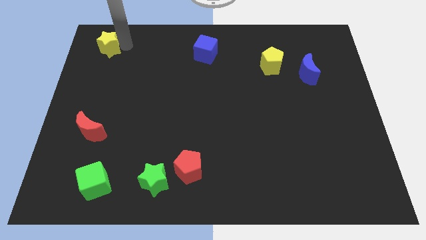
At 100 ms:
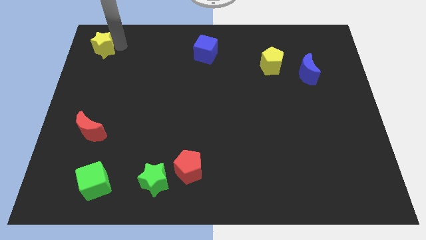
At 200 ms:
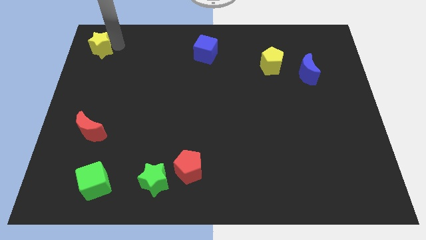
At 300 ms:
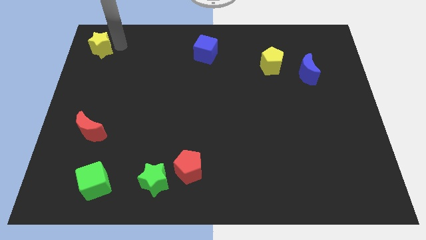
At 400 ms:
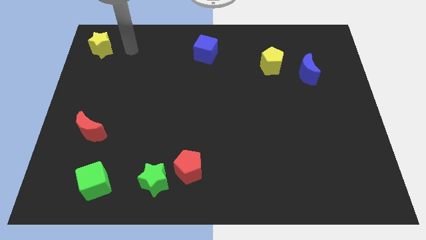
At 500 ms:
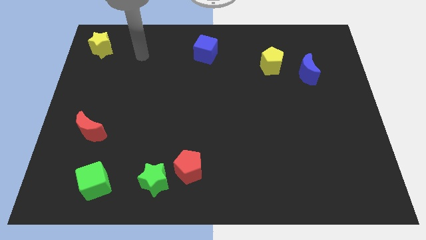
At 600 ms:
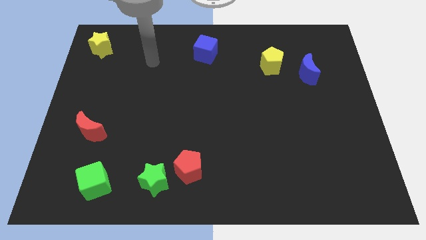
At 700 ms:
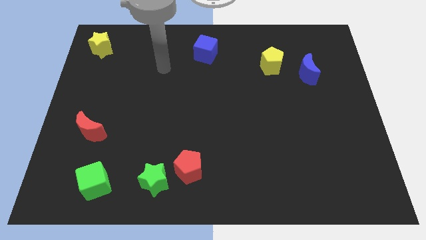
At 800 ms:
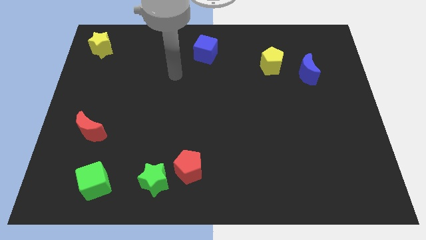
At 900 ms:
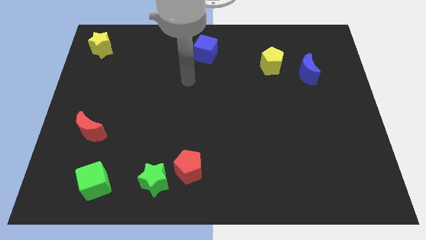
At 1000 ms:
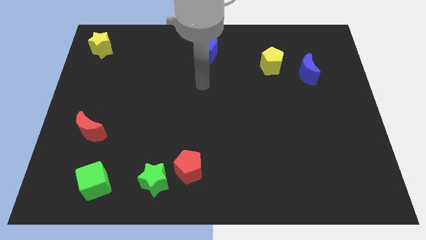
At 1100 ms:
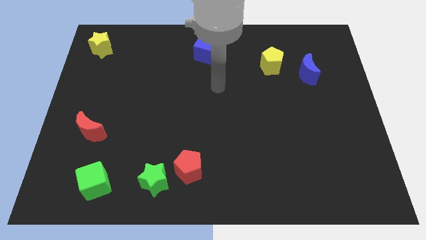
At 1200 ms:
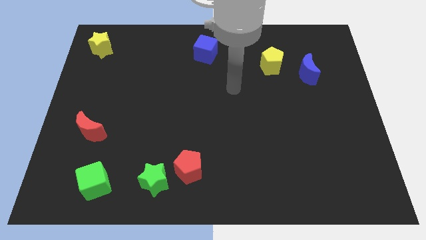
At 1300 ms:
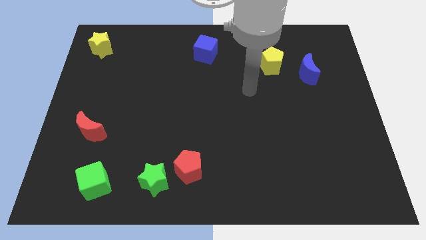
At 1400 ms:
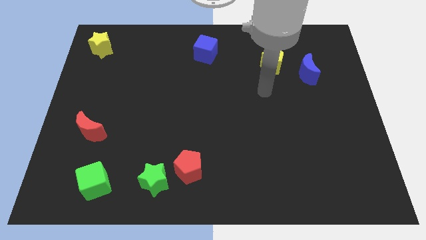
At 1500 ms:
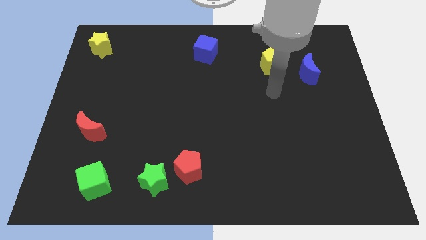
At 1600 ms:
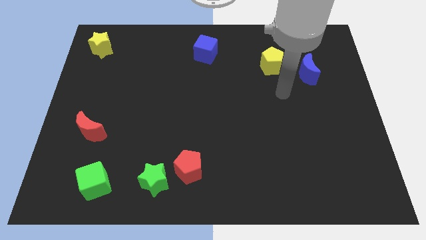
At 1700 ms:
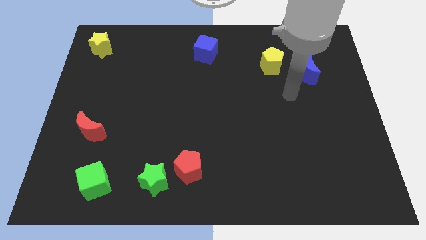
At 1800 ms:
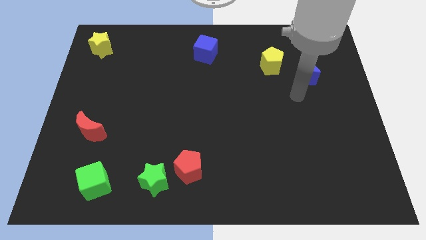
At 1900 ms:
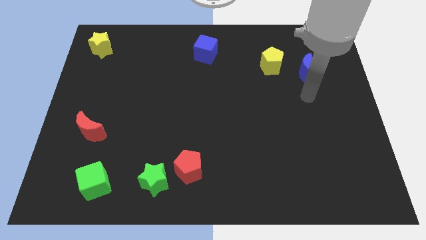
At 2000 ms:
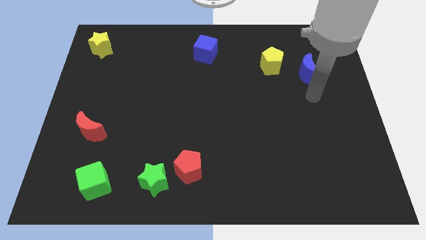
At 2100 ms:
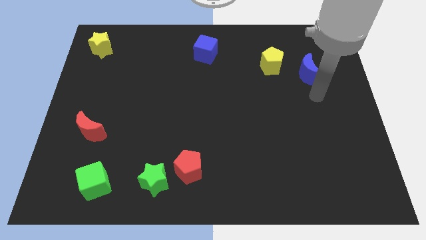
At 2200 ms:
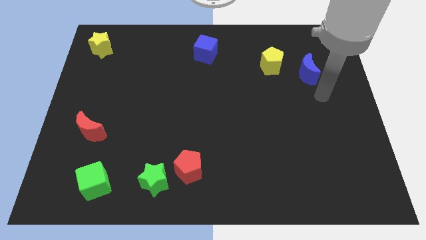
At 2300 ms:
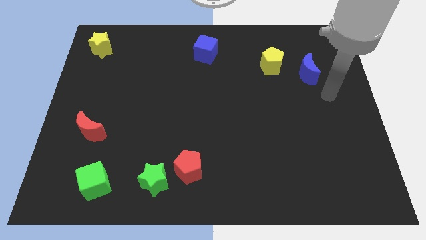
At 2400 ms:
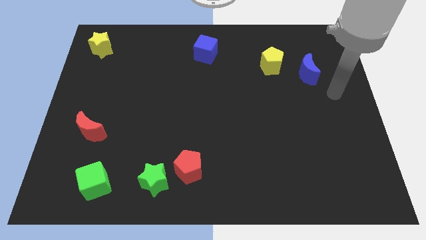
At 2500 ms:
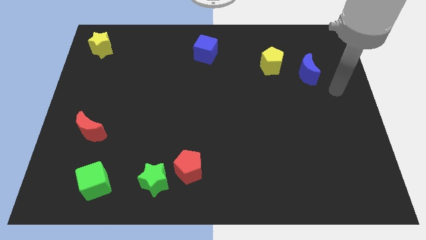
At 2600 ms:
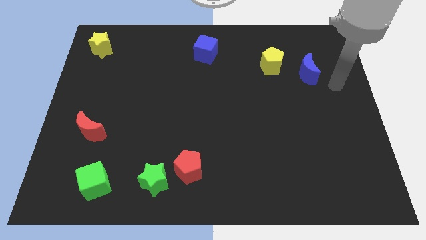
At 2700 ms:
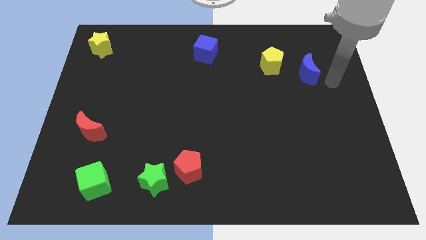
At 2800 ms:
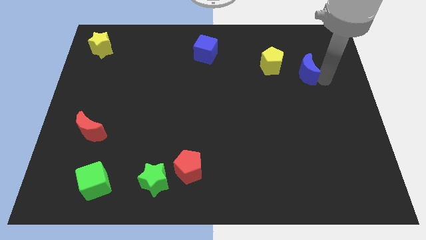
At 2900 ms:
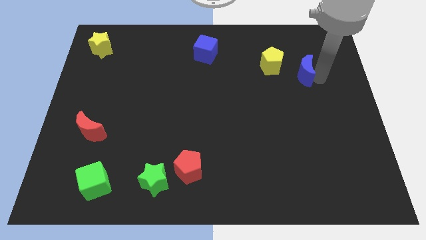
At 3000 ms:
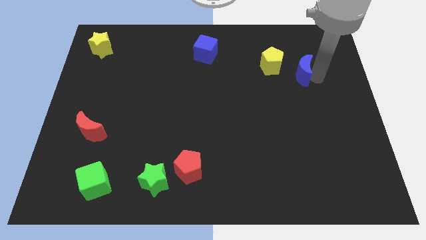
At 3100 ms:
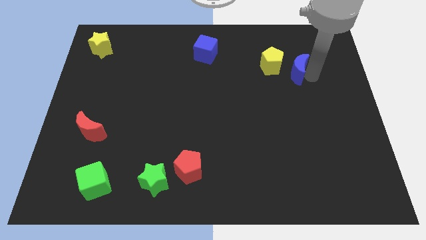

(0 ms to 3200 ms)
go away from the yellow star

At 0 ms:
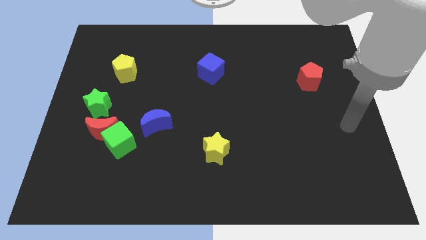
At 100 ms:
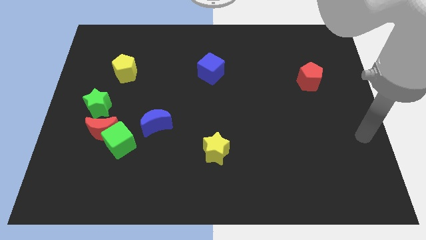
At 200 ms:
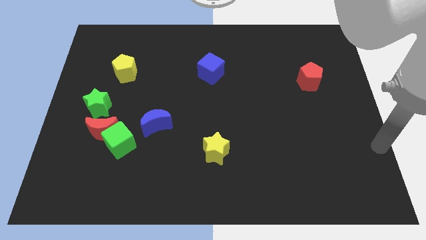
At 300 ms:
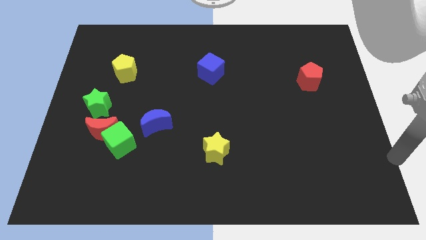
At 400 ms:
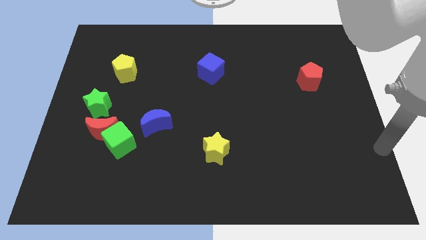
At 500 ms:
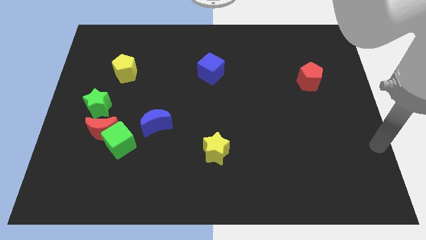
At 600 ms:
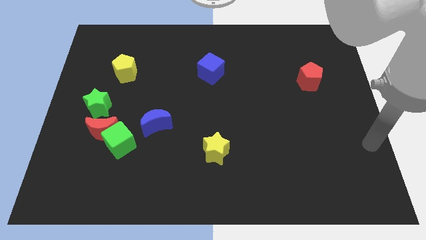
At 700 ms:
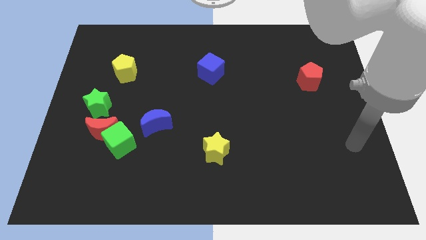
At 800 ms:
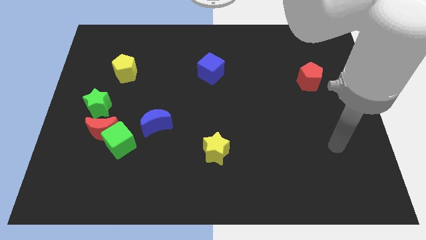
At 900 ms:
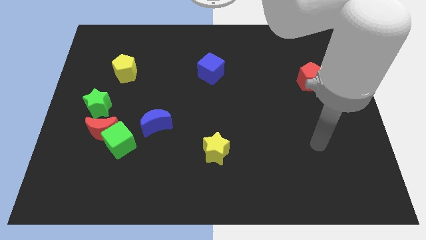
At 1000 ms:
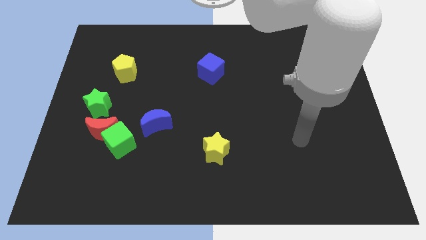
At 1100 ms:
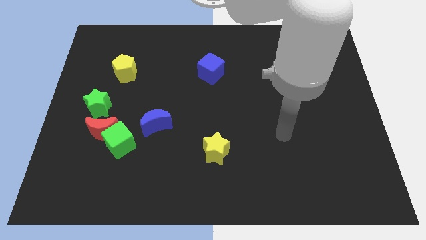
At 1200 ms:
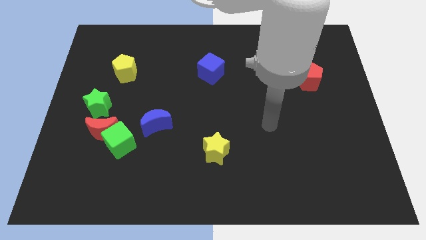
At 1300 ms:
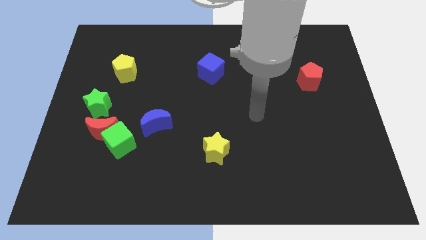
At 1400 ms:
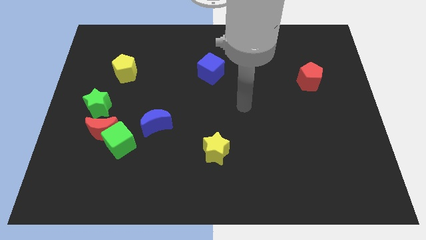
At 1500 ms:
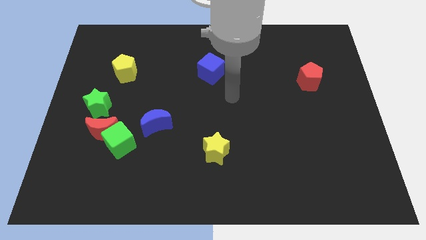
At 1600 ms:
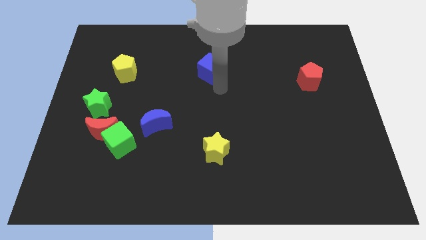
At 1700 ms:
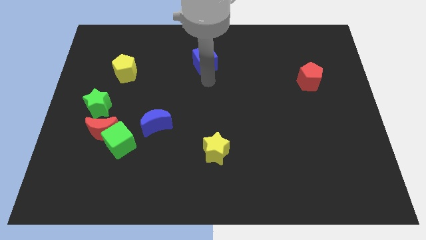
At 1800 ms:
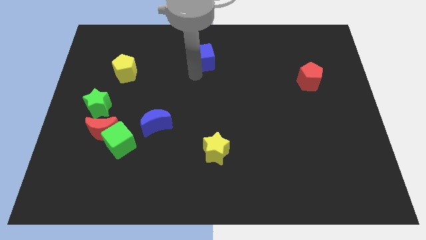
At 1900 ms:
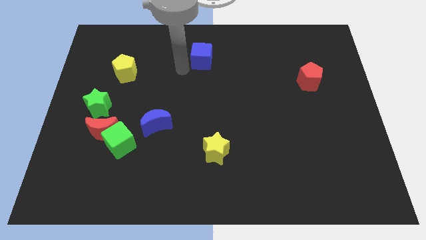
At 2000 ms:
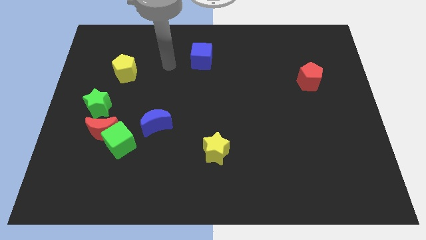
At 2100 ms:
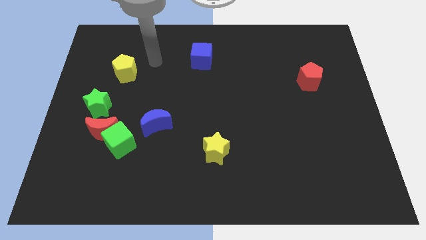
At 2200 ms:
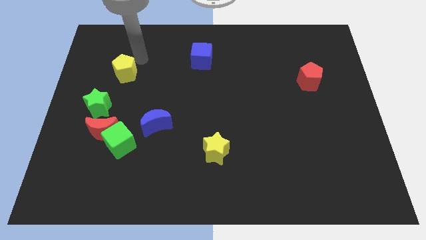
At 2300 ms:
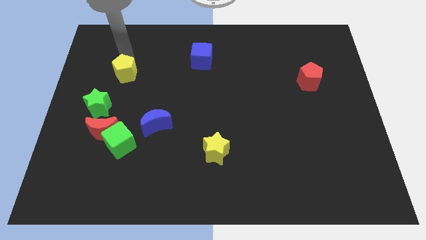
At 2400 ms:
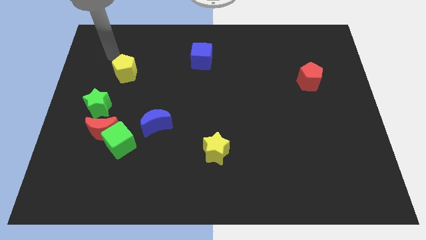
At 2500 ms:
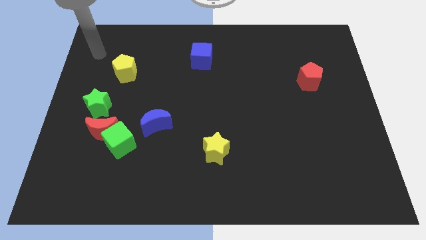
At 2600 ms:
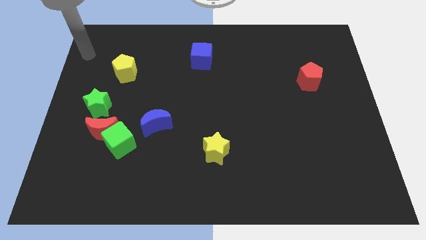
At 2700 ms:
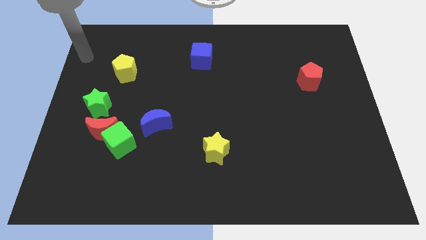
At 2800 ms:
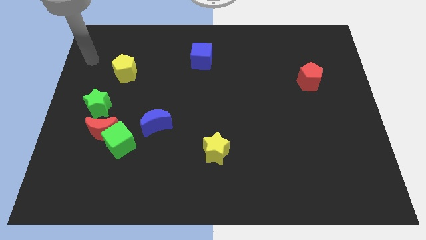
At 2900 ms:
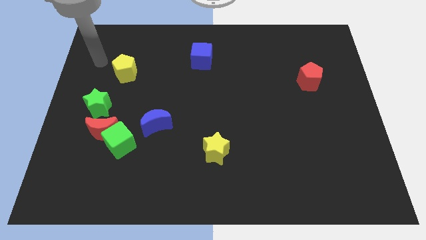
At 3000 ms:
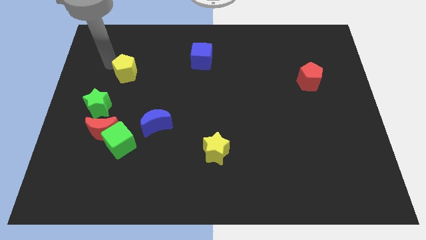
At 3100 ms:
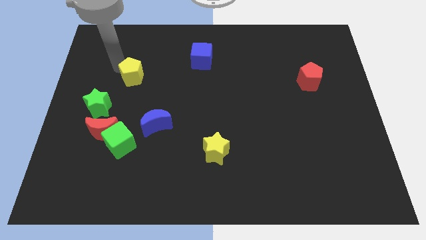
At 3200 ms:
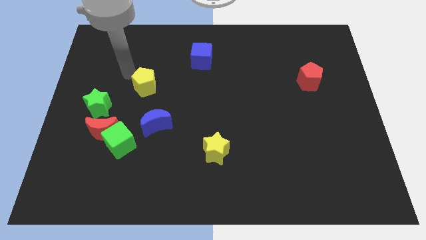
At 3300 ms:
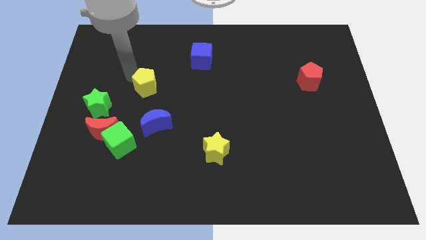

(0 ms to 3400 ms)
push the yellow pentagon slightly to the right

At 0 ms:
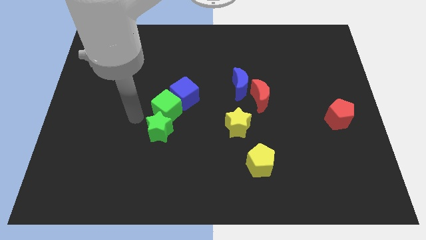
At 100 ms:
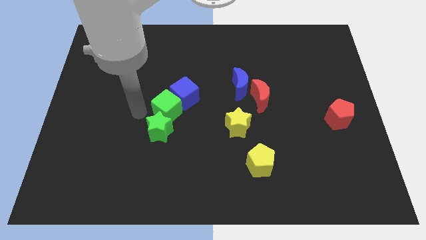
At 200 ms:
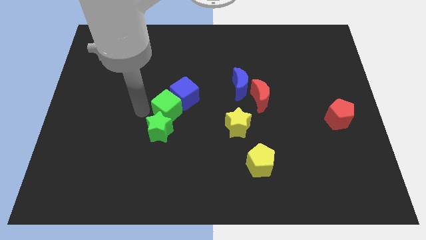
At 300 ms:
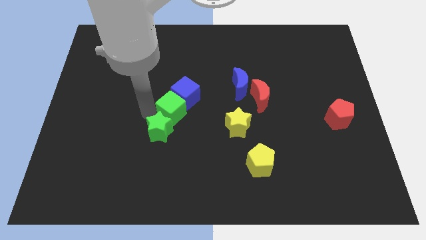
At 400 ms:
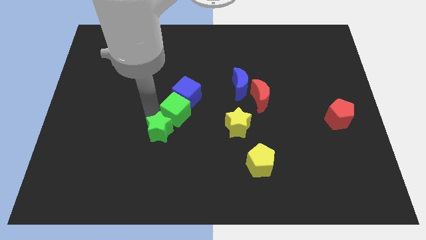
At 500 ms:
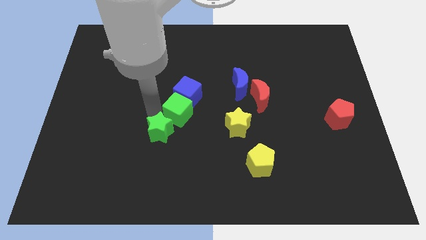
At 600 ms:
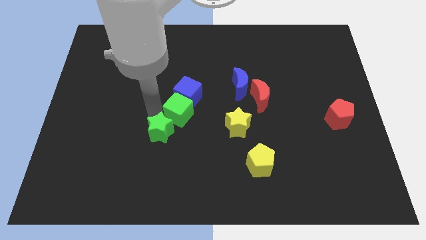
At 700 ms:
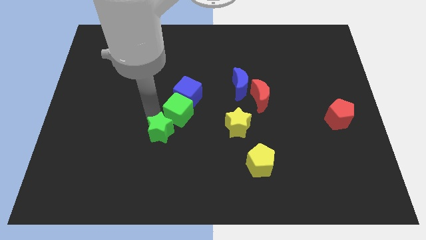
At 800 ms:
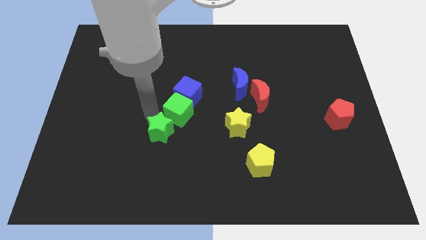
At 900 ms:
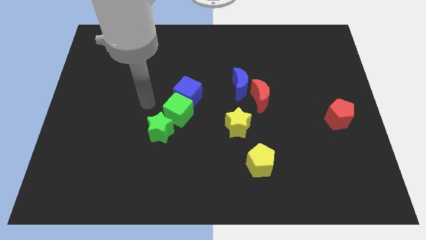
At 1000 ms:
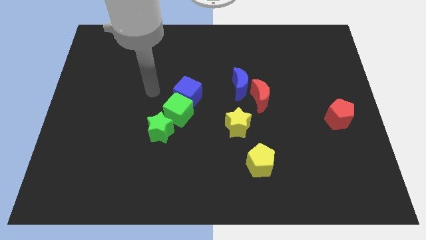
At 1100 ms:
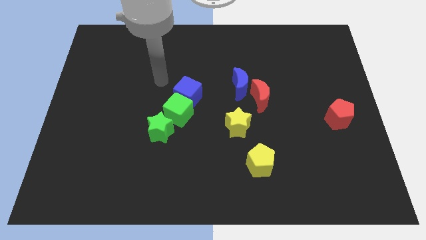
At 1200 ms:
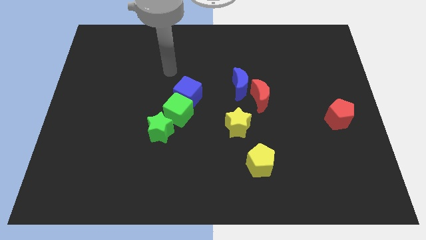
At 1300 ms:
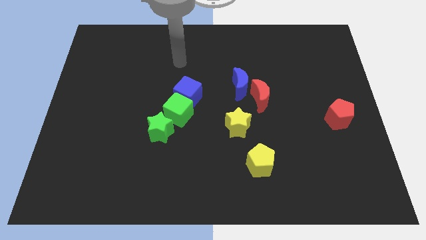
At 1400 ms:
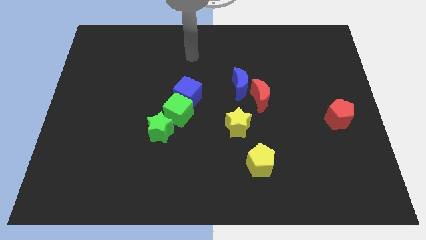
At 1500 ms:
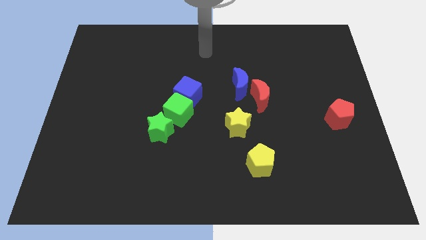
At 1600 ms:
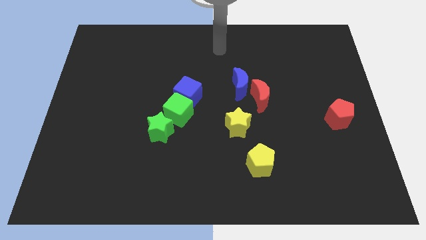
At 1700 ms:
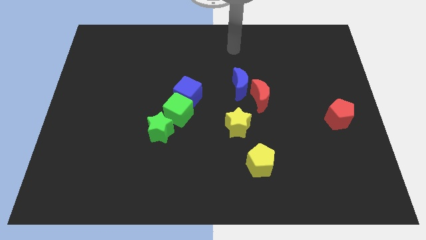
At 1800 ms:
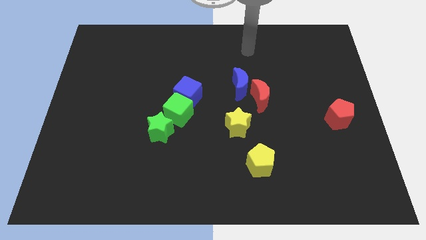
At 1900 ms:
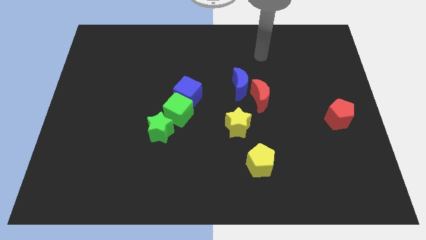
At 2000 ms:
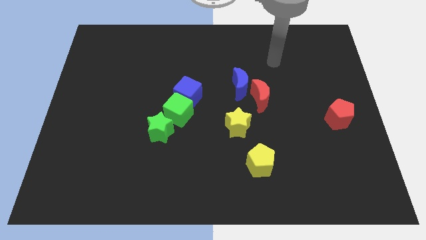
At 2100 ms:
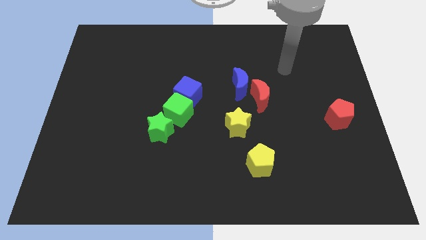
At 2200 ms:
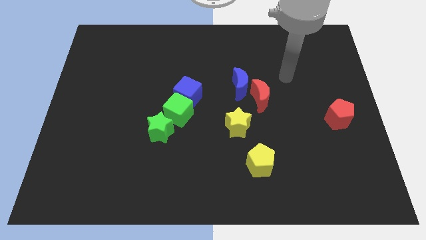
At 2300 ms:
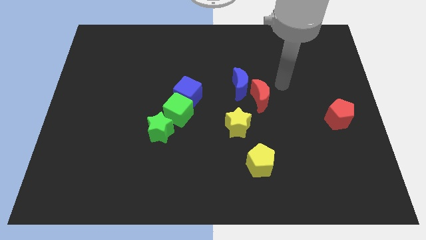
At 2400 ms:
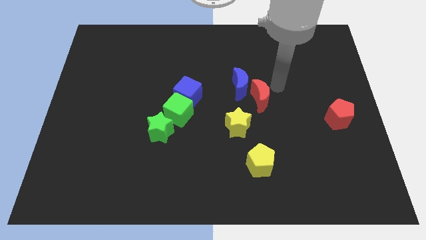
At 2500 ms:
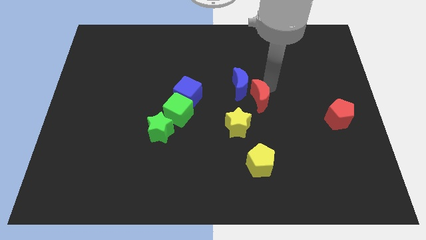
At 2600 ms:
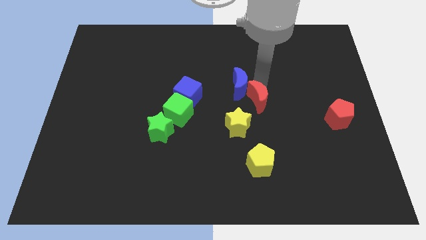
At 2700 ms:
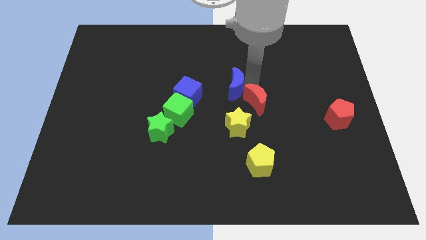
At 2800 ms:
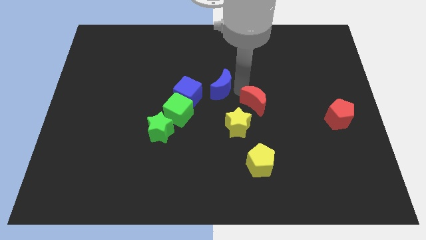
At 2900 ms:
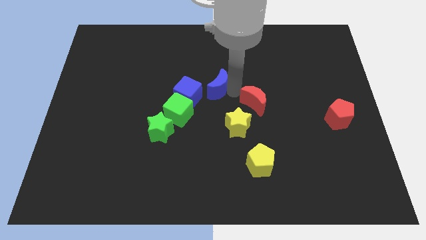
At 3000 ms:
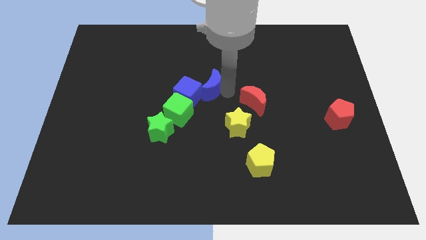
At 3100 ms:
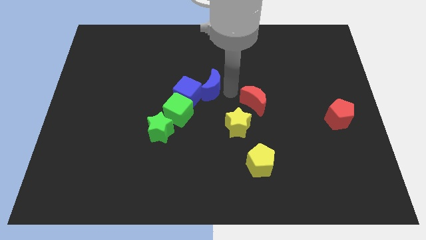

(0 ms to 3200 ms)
place blue crescent near blue cube
